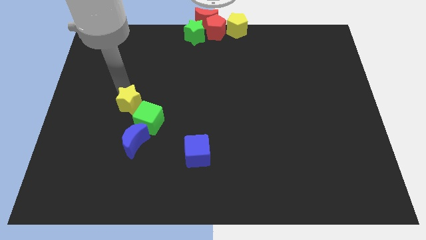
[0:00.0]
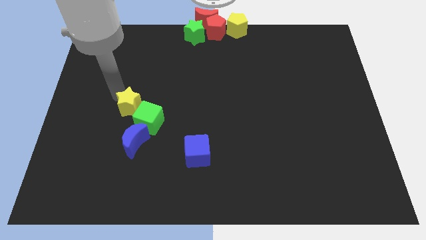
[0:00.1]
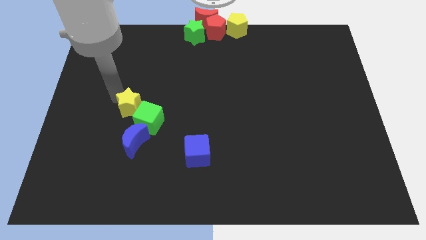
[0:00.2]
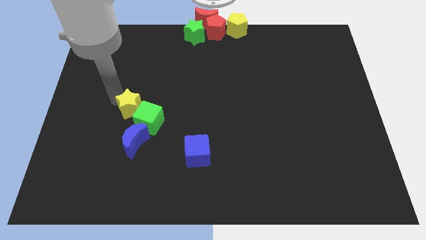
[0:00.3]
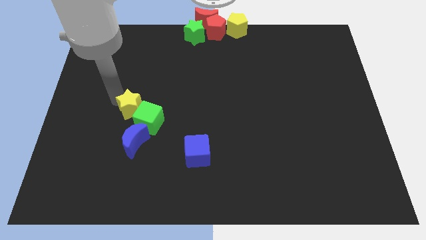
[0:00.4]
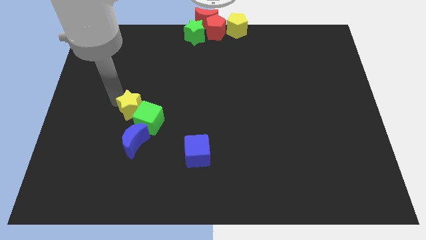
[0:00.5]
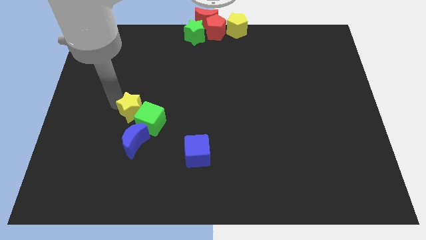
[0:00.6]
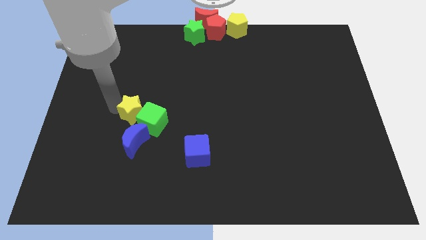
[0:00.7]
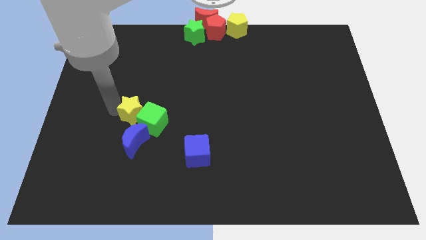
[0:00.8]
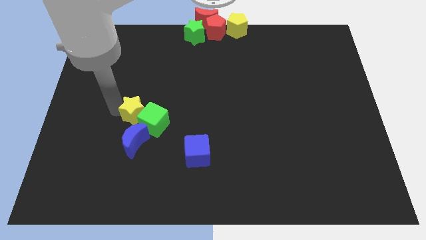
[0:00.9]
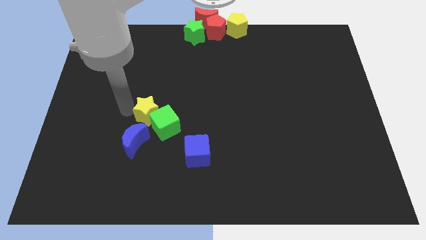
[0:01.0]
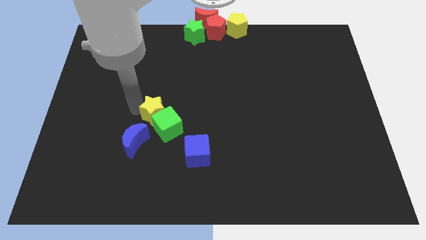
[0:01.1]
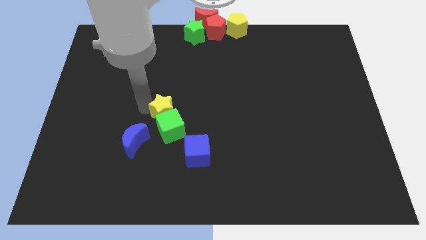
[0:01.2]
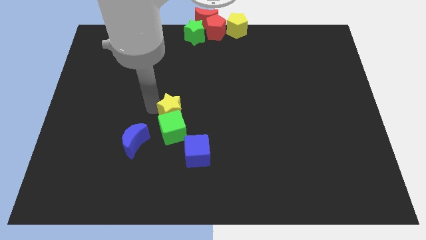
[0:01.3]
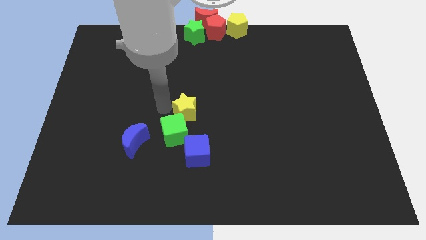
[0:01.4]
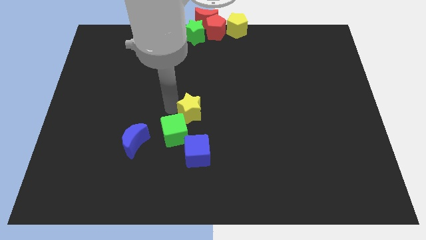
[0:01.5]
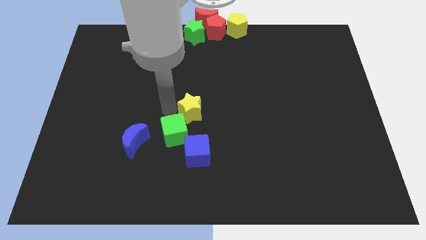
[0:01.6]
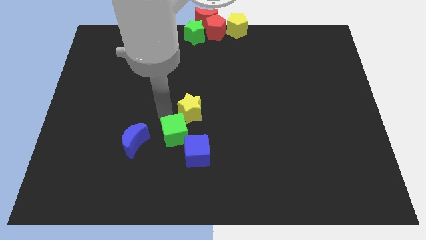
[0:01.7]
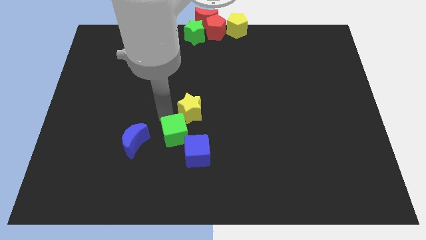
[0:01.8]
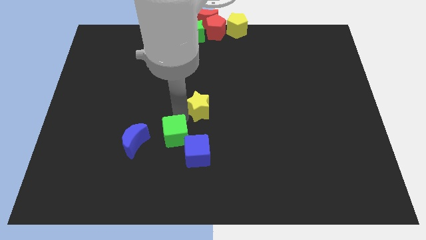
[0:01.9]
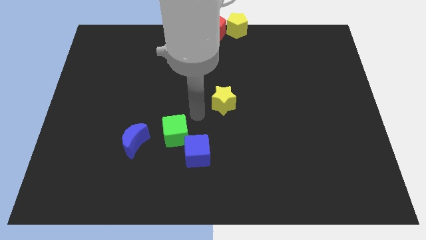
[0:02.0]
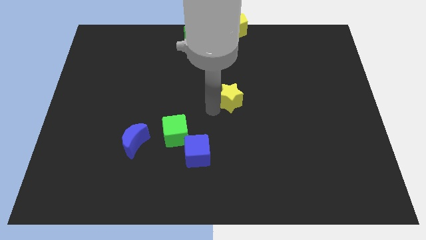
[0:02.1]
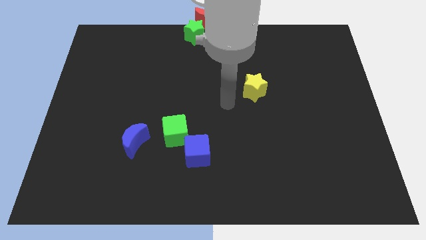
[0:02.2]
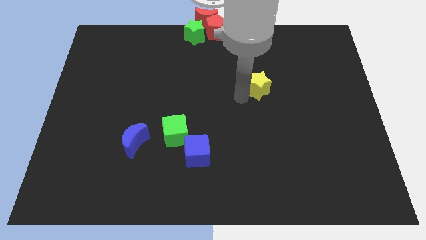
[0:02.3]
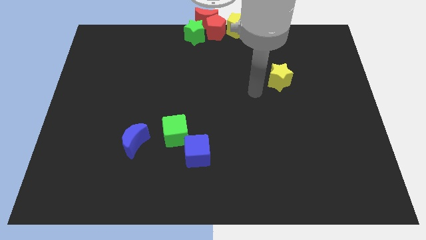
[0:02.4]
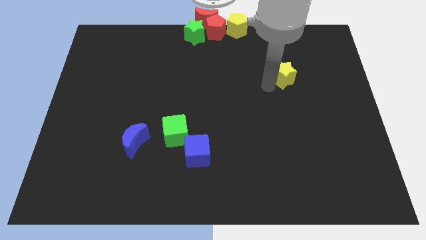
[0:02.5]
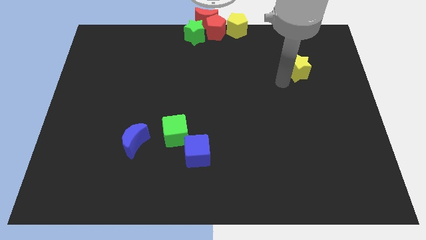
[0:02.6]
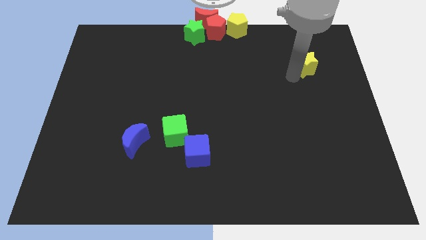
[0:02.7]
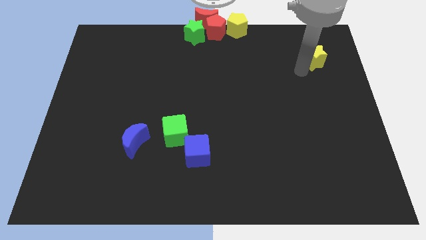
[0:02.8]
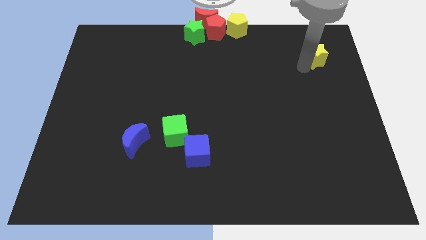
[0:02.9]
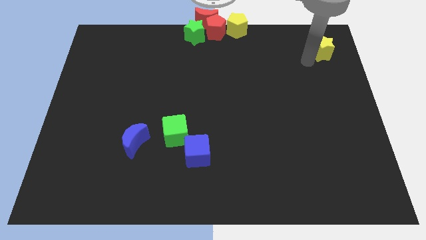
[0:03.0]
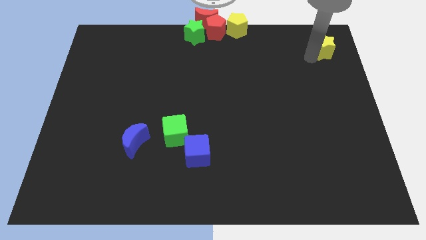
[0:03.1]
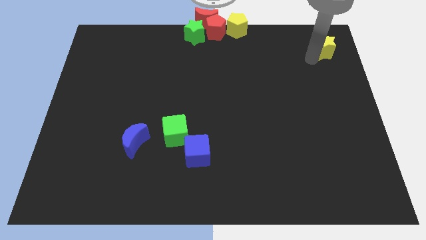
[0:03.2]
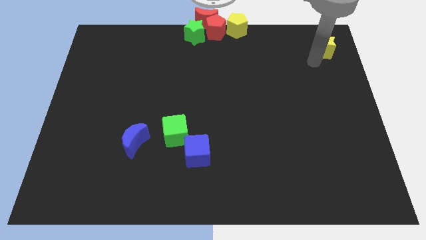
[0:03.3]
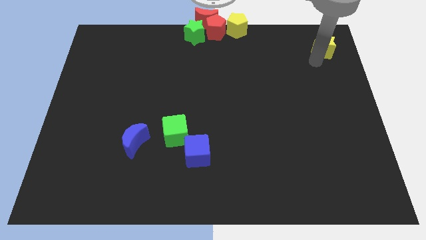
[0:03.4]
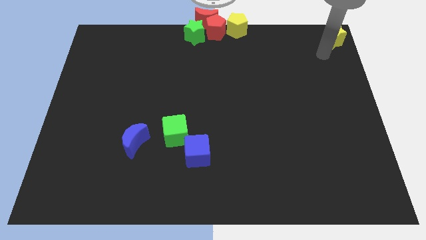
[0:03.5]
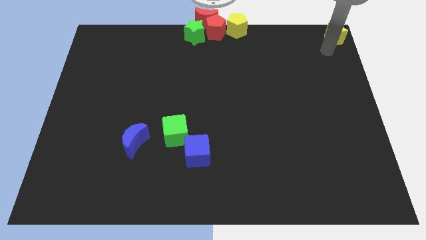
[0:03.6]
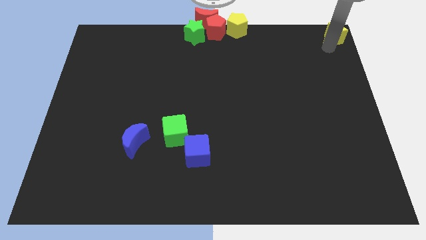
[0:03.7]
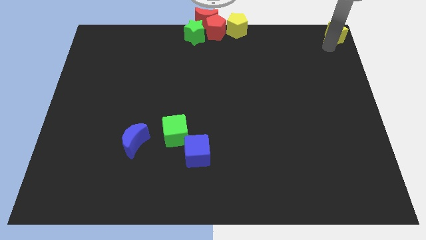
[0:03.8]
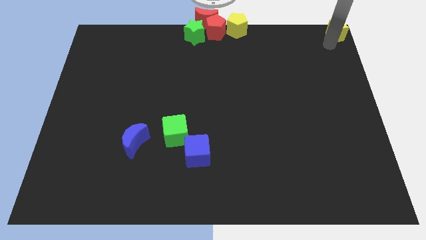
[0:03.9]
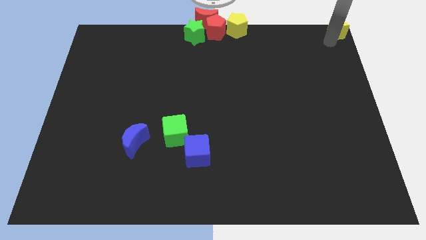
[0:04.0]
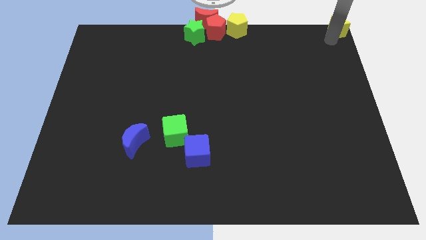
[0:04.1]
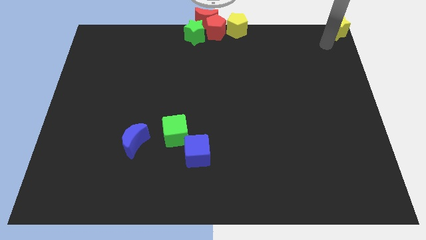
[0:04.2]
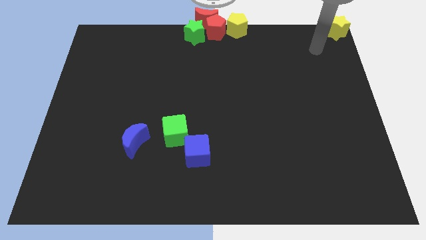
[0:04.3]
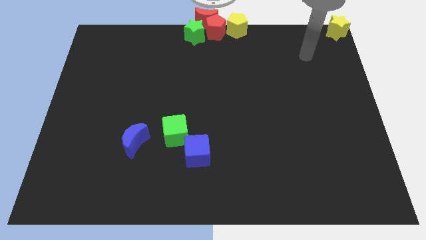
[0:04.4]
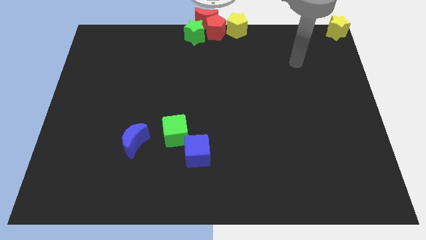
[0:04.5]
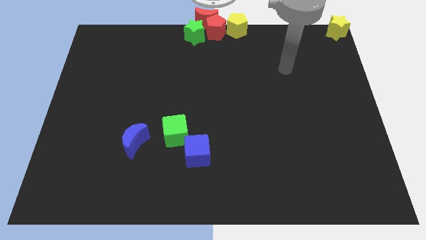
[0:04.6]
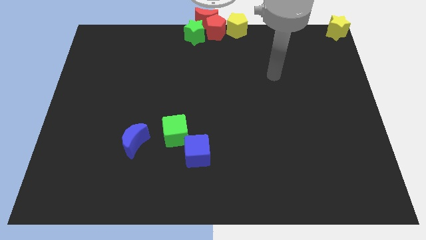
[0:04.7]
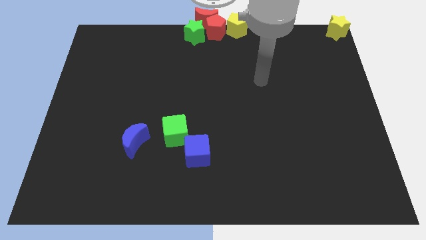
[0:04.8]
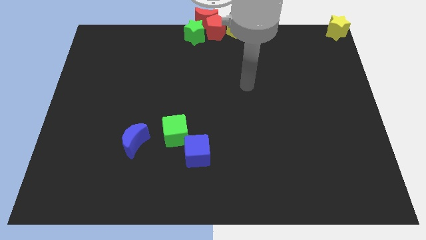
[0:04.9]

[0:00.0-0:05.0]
move the yellow star to the top right corner on the board

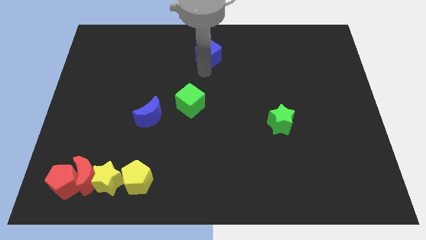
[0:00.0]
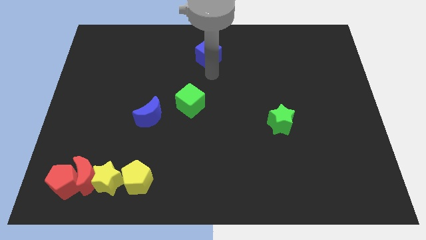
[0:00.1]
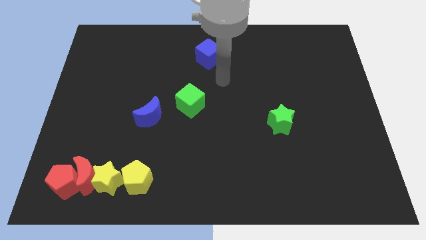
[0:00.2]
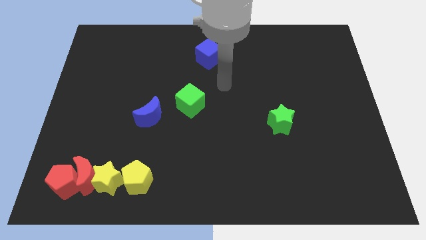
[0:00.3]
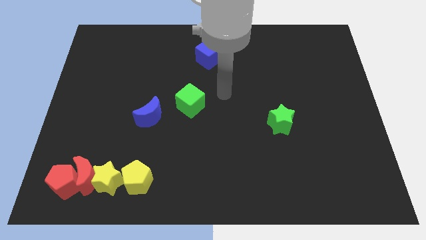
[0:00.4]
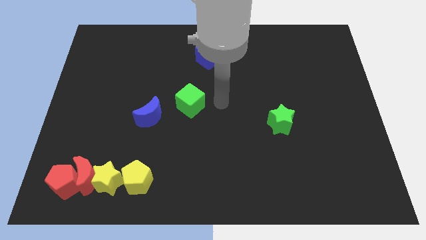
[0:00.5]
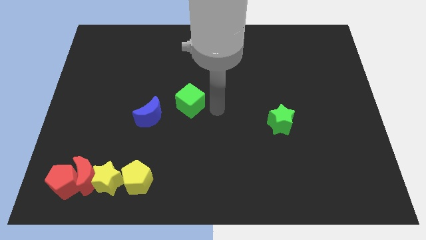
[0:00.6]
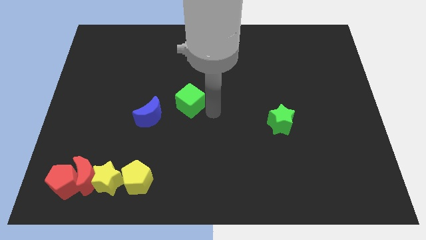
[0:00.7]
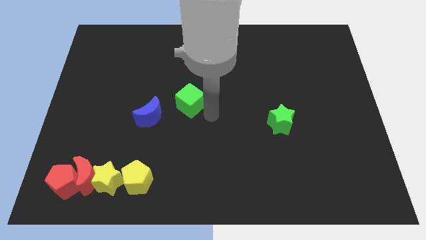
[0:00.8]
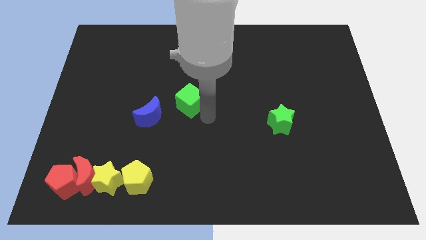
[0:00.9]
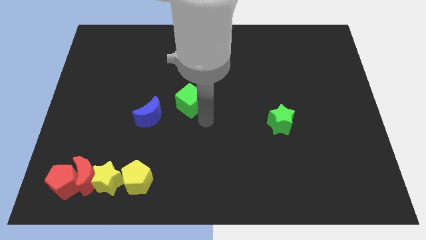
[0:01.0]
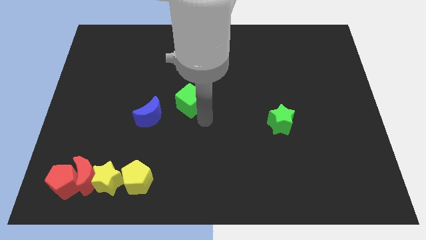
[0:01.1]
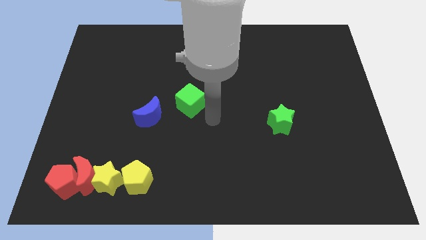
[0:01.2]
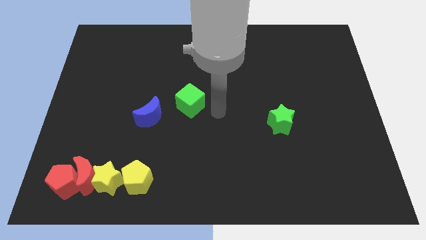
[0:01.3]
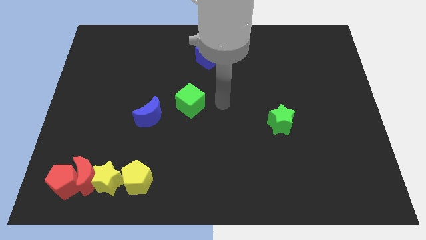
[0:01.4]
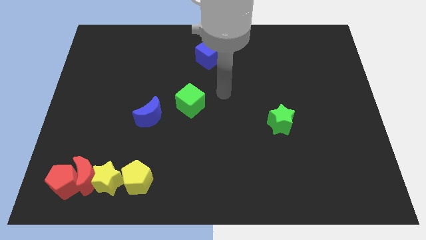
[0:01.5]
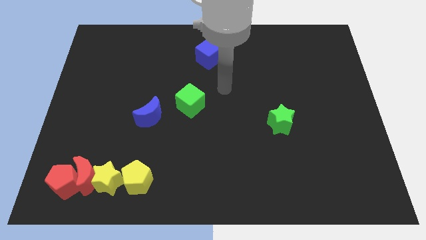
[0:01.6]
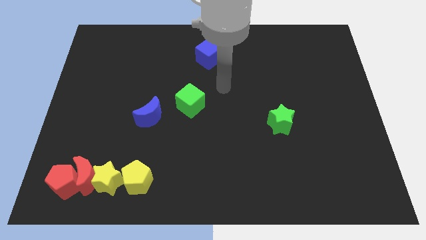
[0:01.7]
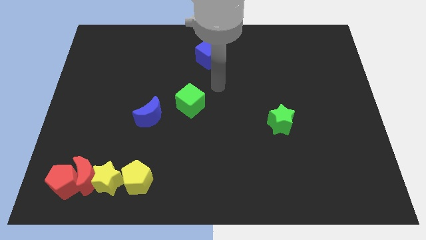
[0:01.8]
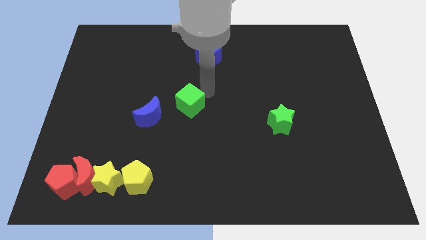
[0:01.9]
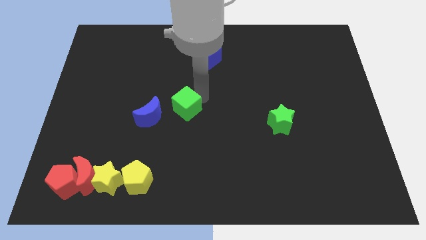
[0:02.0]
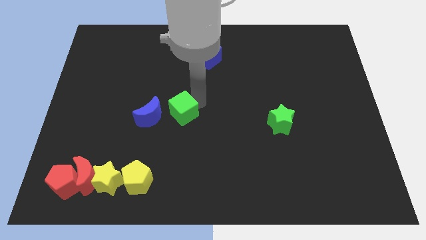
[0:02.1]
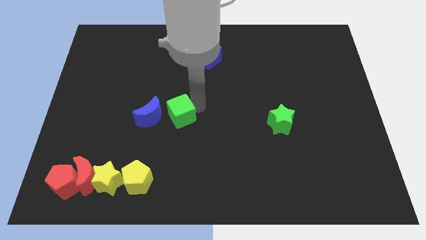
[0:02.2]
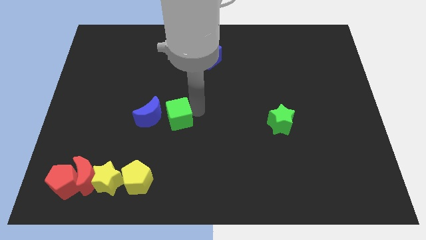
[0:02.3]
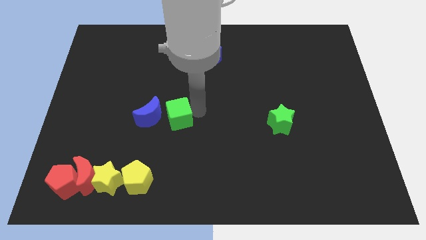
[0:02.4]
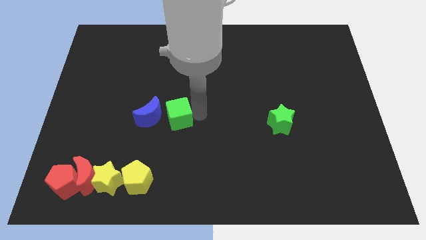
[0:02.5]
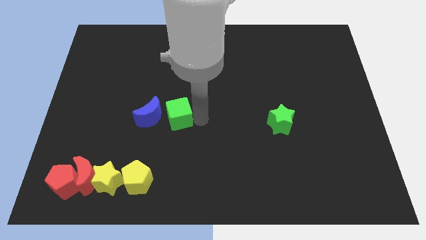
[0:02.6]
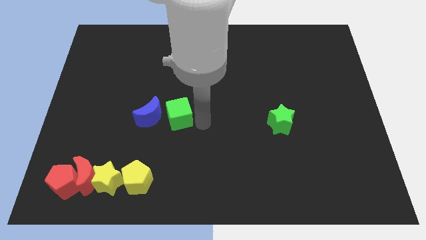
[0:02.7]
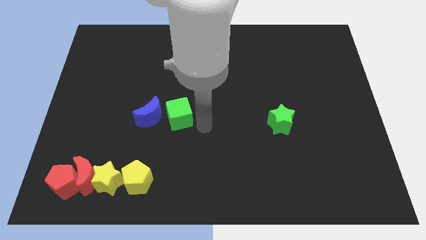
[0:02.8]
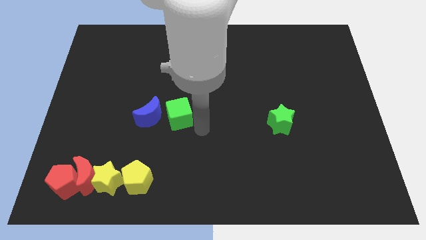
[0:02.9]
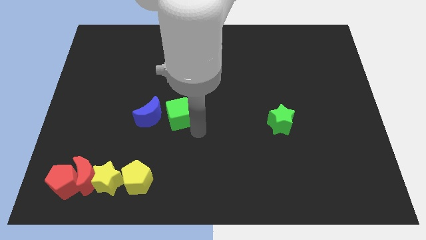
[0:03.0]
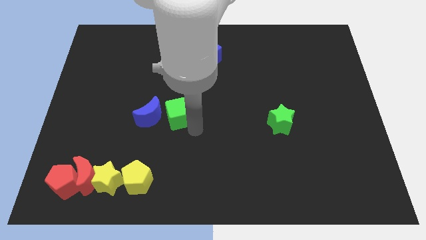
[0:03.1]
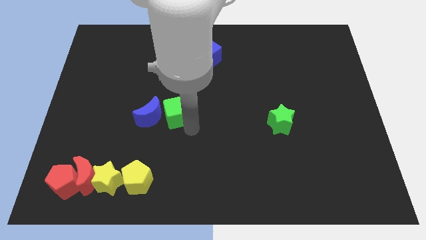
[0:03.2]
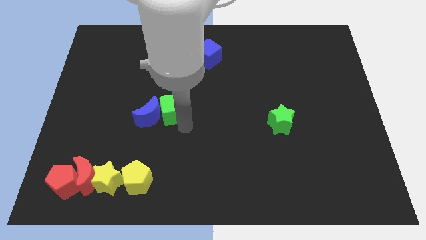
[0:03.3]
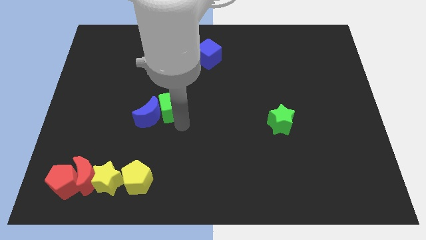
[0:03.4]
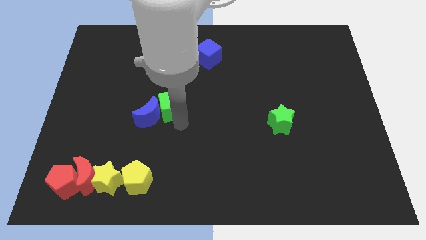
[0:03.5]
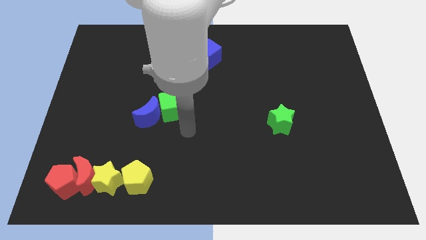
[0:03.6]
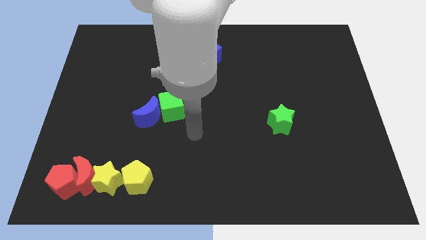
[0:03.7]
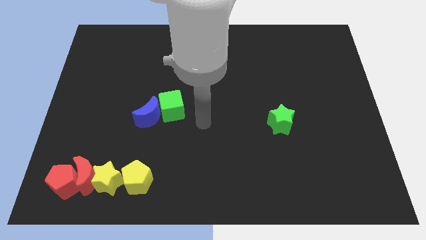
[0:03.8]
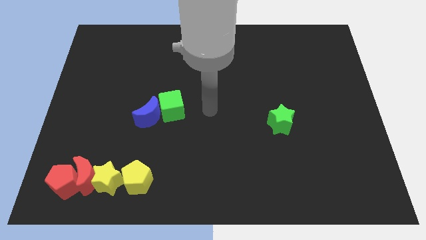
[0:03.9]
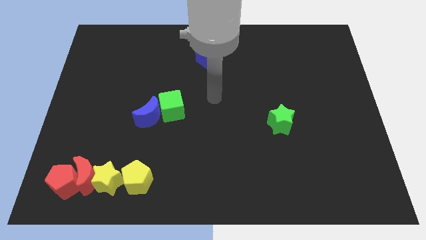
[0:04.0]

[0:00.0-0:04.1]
push the green cube into the blue moon
